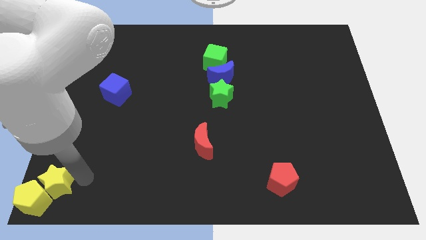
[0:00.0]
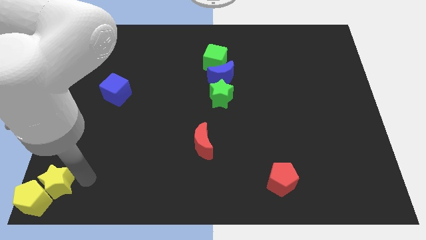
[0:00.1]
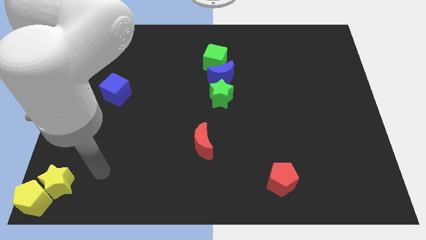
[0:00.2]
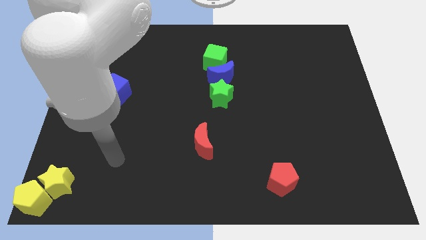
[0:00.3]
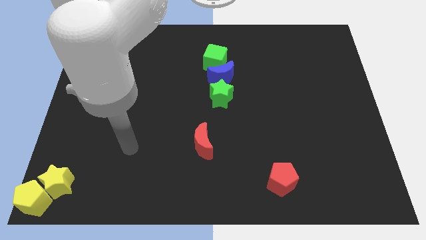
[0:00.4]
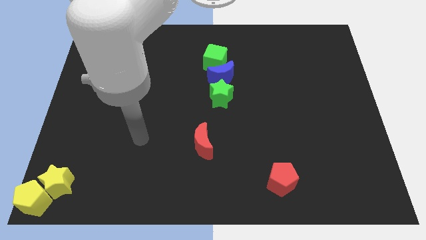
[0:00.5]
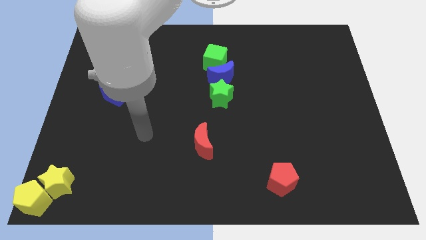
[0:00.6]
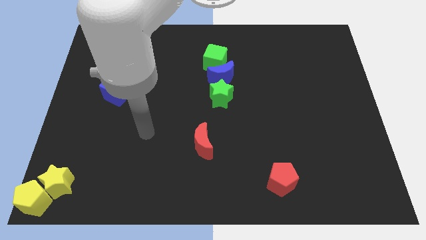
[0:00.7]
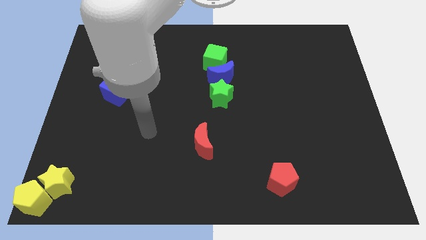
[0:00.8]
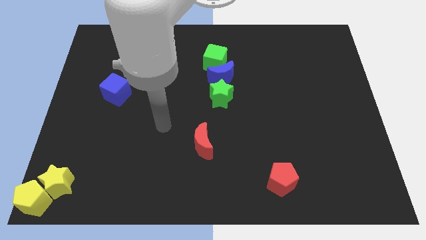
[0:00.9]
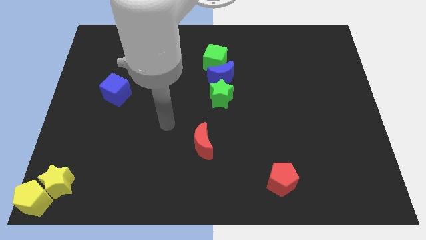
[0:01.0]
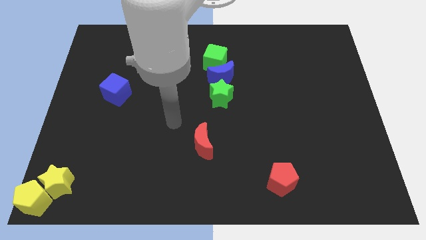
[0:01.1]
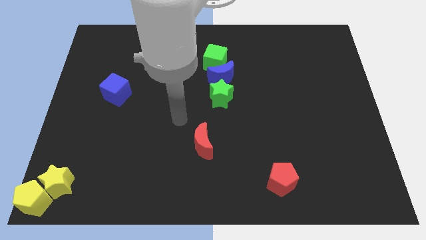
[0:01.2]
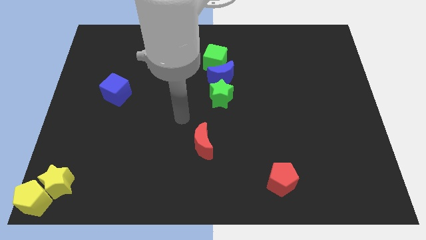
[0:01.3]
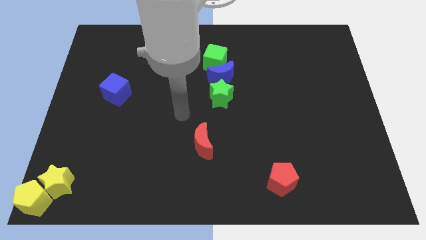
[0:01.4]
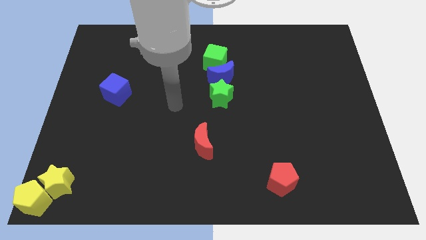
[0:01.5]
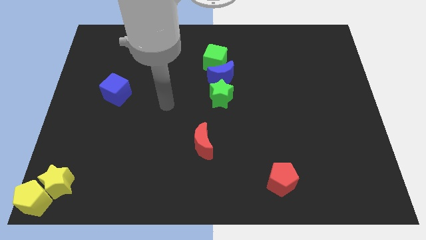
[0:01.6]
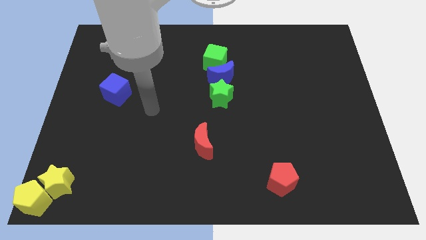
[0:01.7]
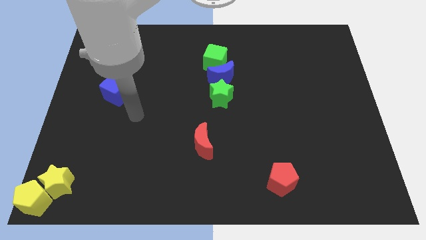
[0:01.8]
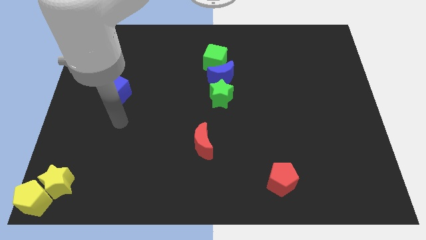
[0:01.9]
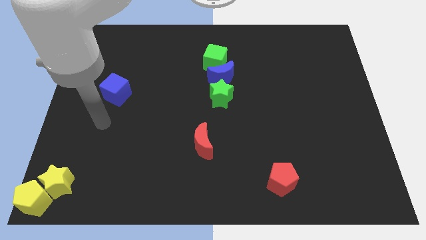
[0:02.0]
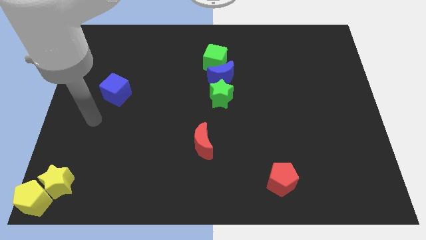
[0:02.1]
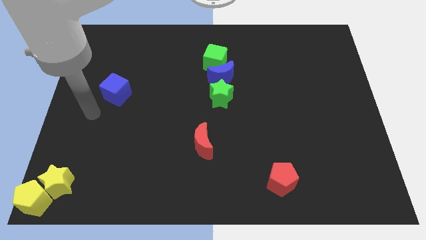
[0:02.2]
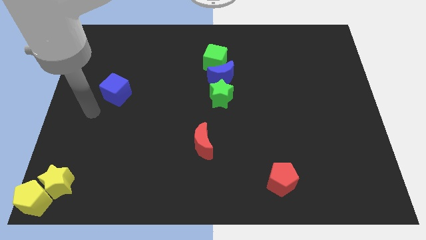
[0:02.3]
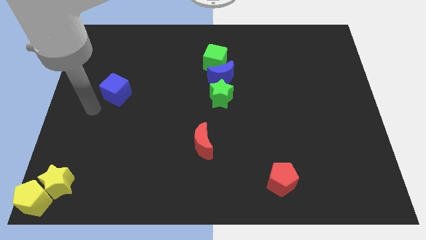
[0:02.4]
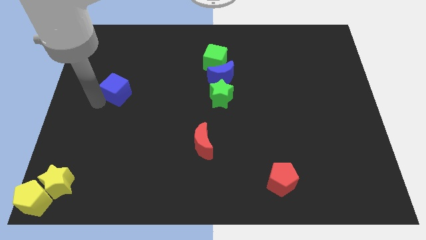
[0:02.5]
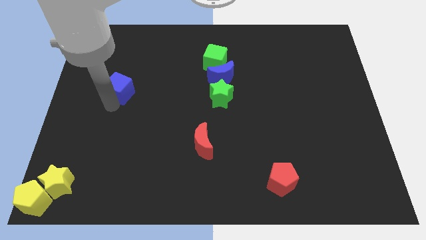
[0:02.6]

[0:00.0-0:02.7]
touch the blue cube

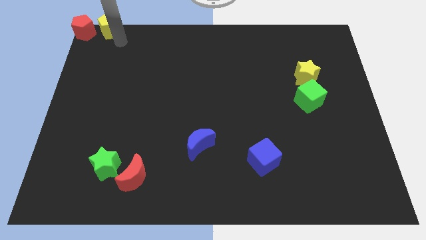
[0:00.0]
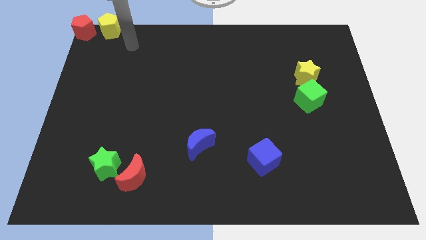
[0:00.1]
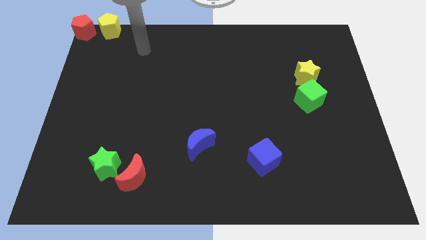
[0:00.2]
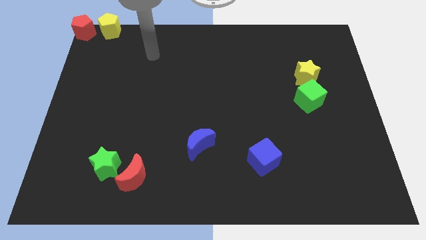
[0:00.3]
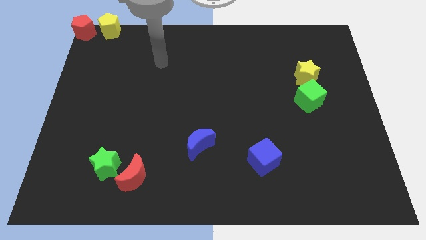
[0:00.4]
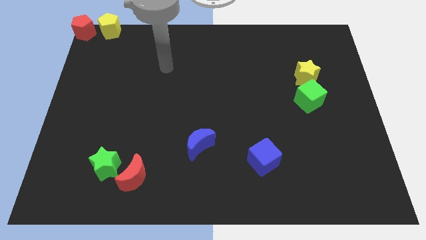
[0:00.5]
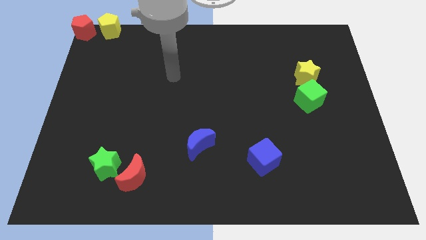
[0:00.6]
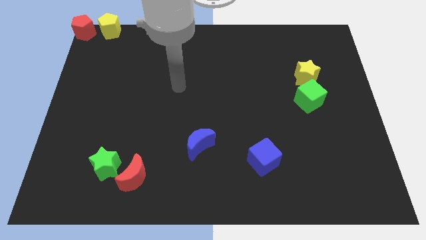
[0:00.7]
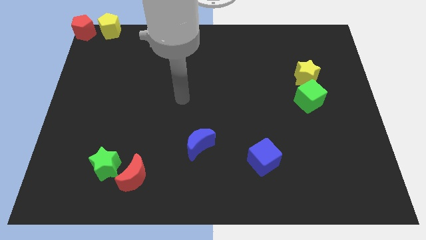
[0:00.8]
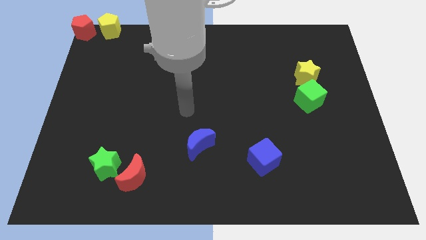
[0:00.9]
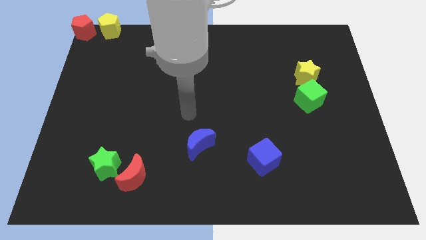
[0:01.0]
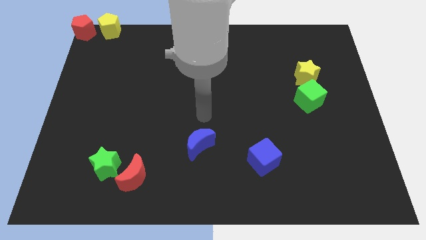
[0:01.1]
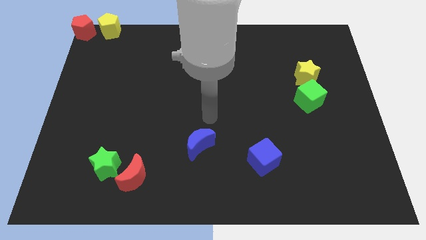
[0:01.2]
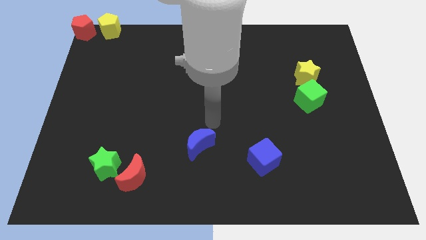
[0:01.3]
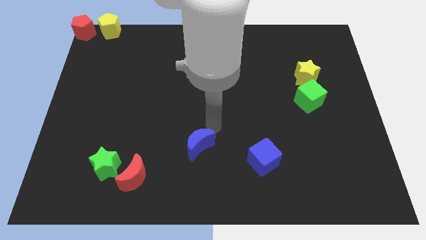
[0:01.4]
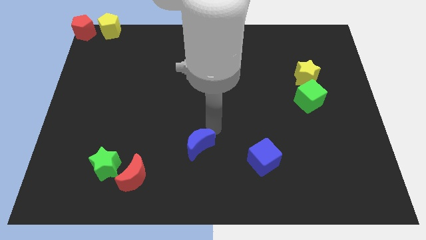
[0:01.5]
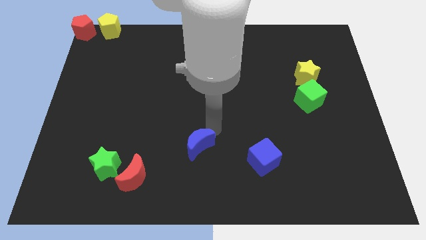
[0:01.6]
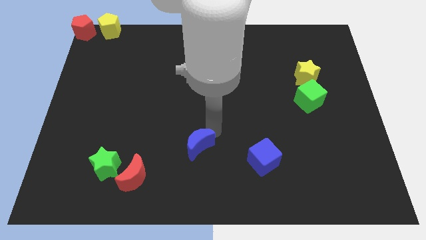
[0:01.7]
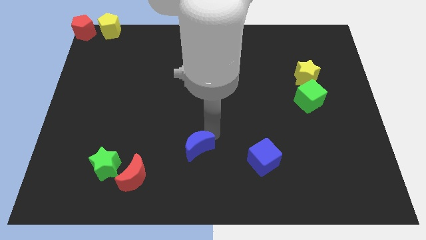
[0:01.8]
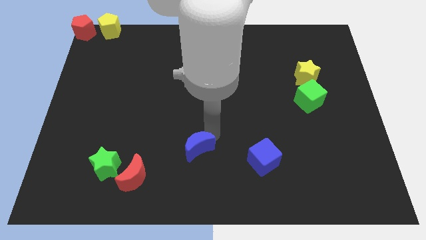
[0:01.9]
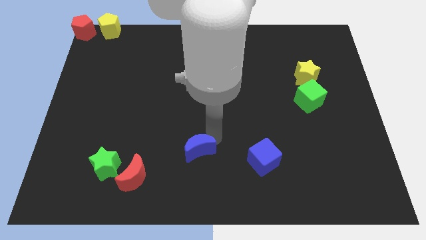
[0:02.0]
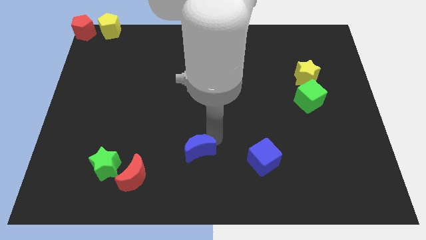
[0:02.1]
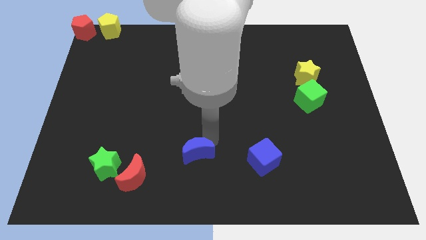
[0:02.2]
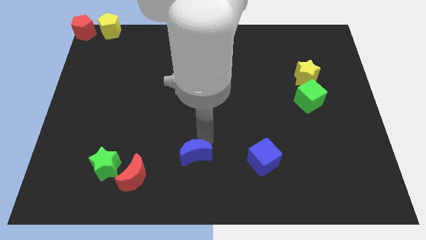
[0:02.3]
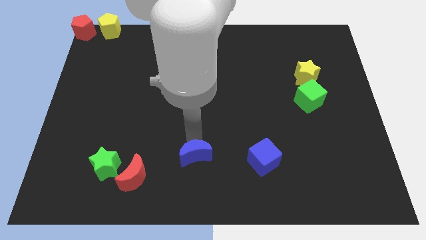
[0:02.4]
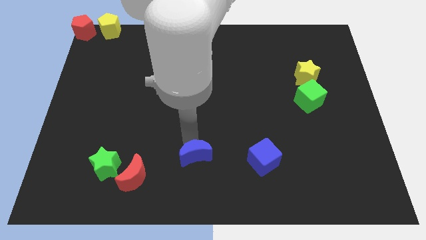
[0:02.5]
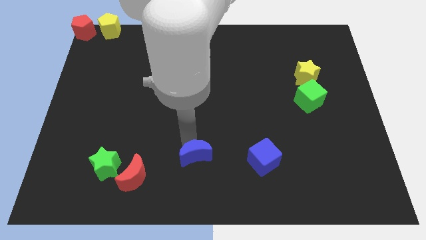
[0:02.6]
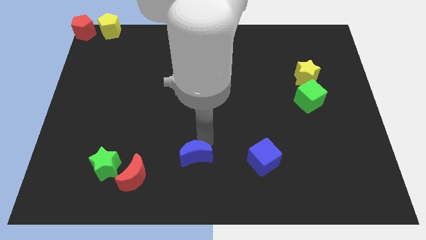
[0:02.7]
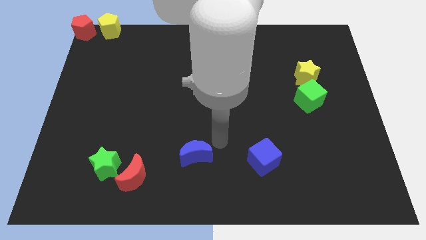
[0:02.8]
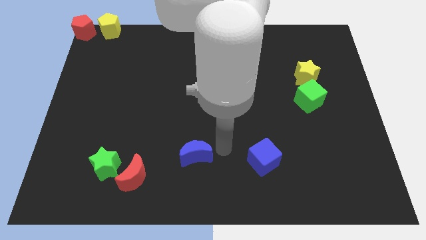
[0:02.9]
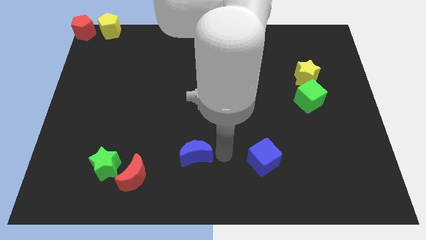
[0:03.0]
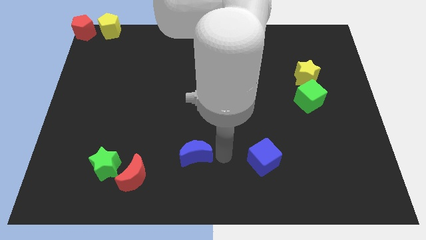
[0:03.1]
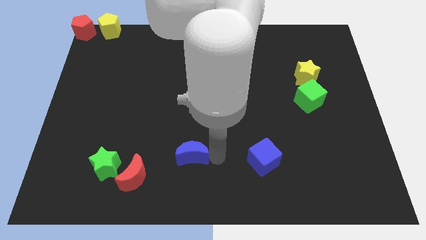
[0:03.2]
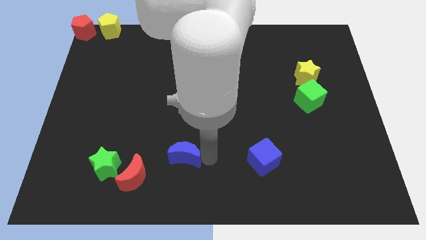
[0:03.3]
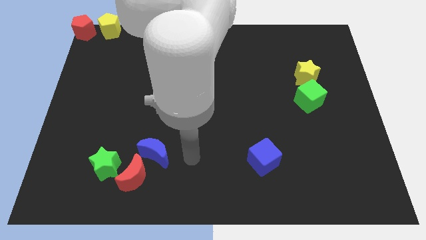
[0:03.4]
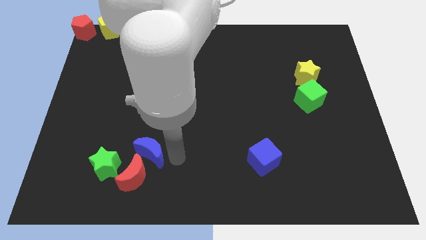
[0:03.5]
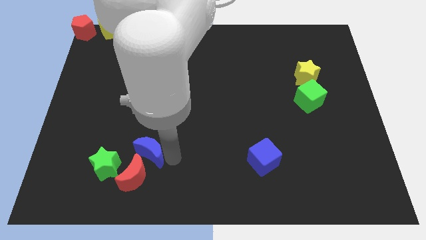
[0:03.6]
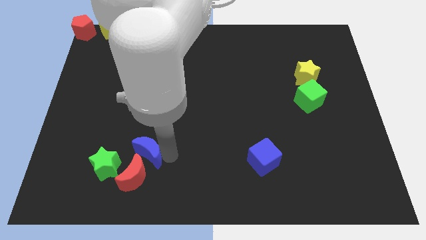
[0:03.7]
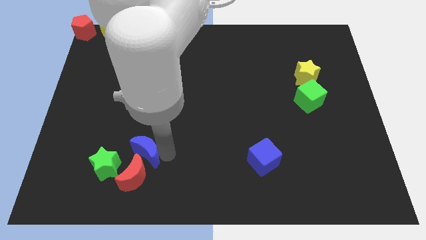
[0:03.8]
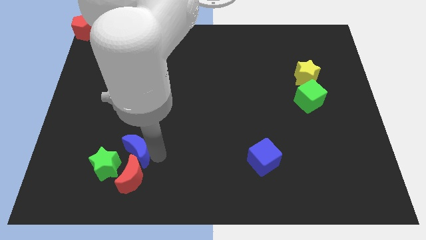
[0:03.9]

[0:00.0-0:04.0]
push the blue moon into the red moon

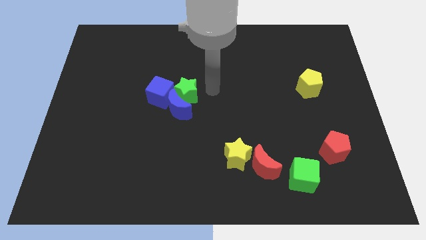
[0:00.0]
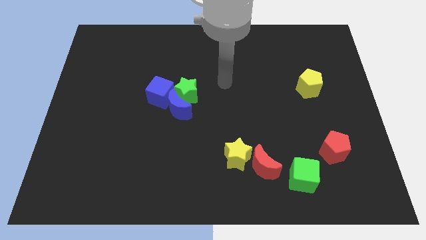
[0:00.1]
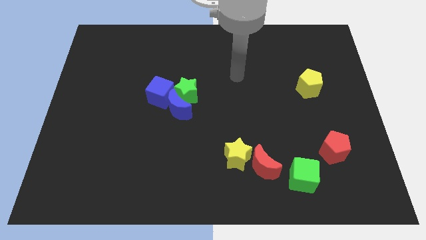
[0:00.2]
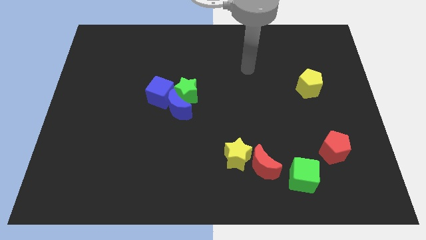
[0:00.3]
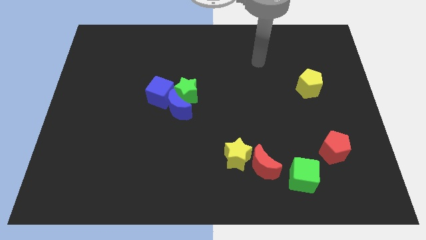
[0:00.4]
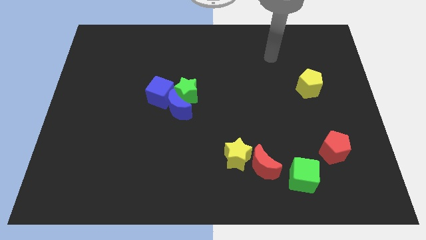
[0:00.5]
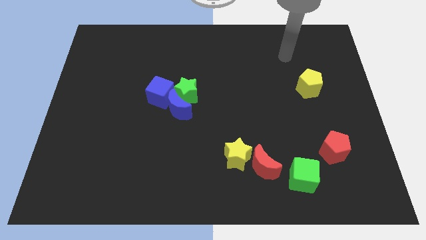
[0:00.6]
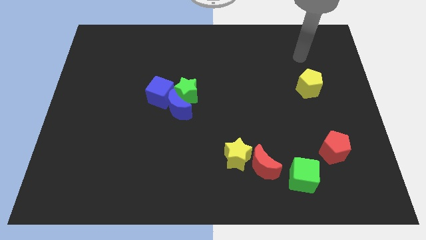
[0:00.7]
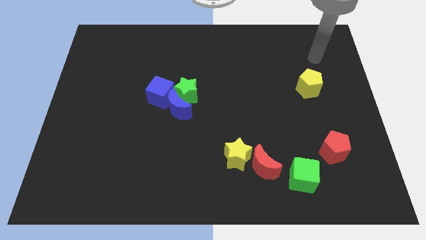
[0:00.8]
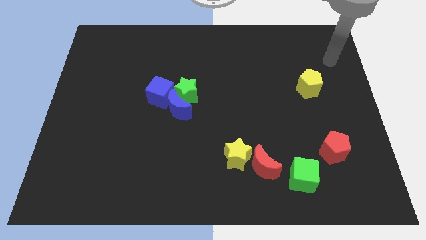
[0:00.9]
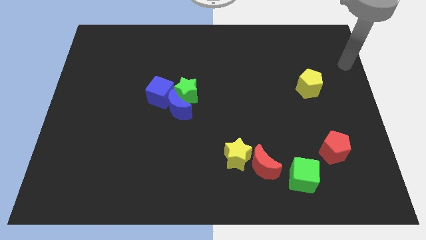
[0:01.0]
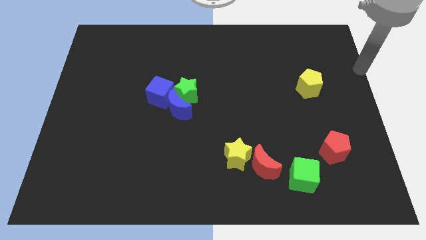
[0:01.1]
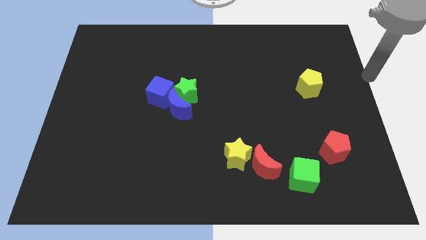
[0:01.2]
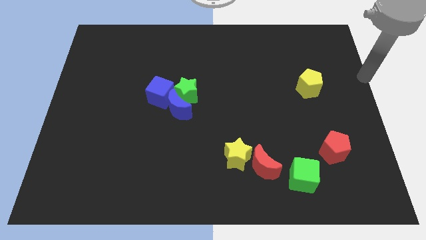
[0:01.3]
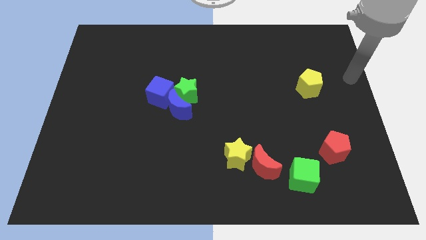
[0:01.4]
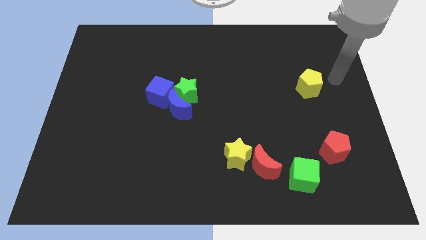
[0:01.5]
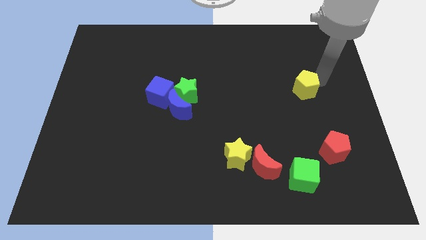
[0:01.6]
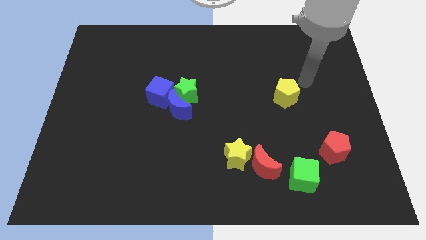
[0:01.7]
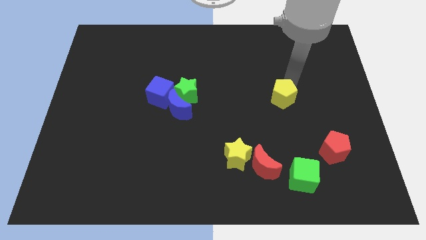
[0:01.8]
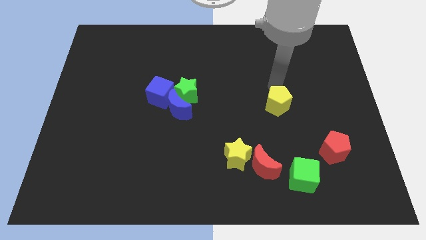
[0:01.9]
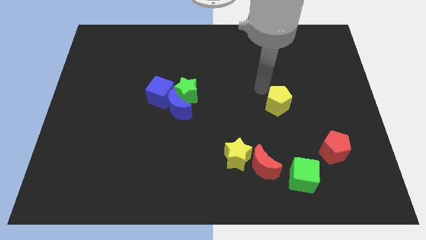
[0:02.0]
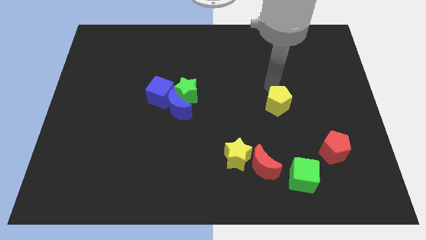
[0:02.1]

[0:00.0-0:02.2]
move the yellow pentagon towards center of the board
